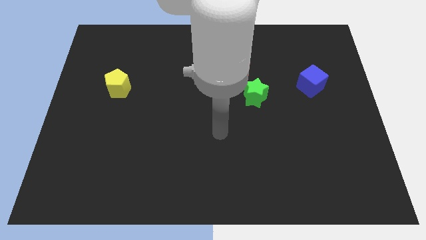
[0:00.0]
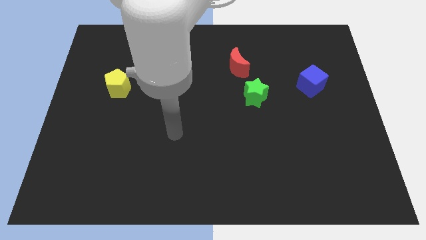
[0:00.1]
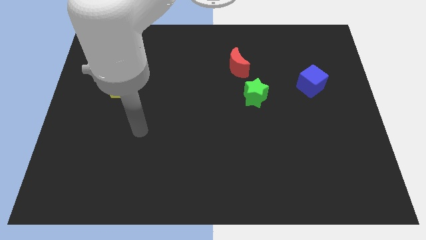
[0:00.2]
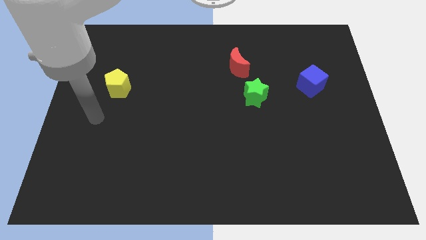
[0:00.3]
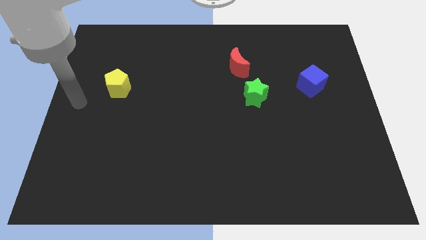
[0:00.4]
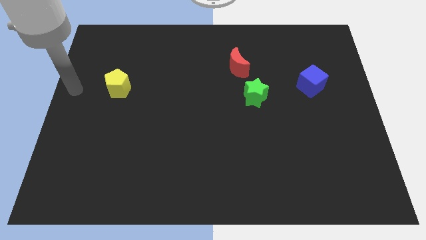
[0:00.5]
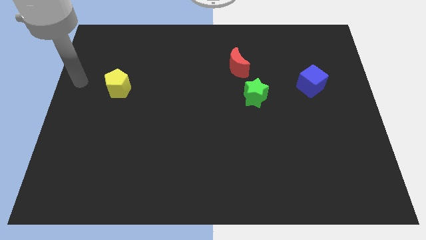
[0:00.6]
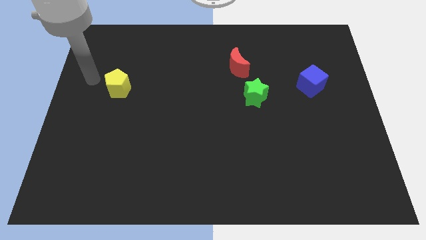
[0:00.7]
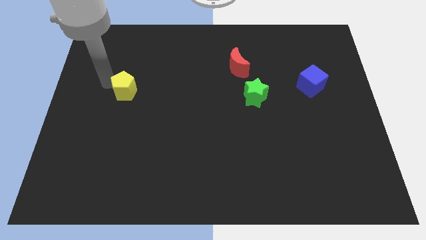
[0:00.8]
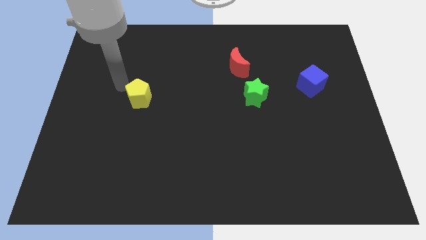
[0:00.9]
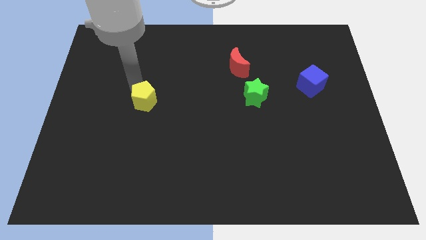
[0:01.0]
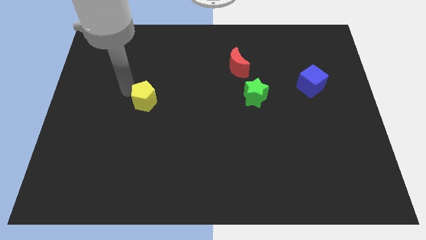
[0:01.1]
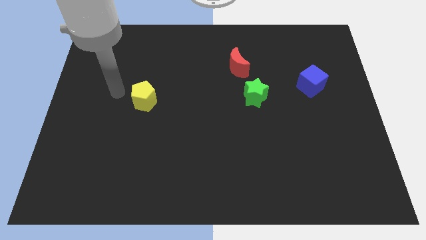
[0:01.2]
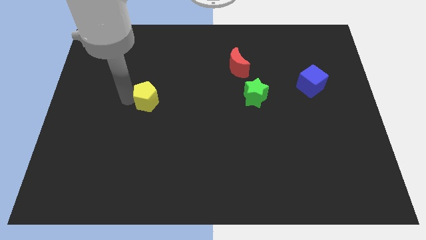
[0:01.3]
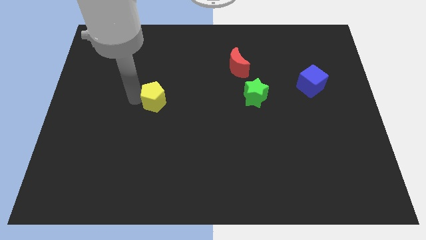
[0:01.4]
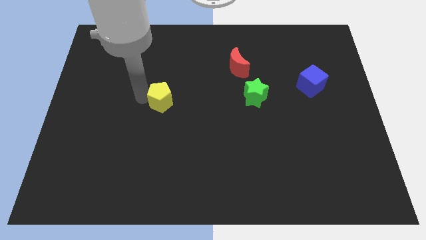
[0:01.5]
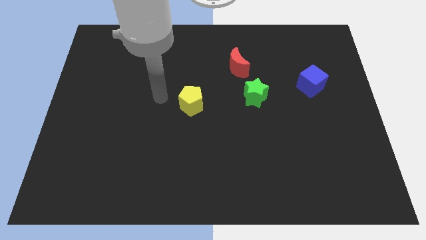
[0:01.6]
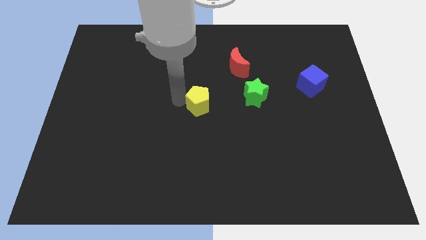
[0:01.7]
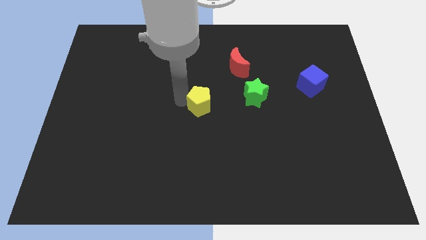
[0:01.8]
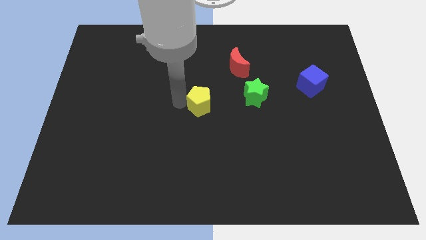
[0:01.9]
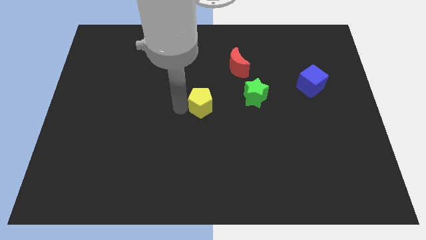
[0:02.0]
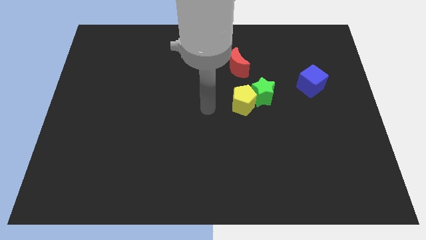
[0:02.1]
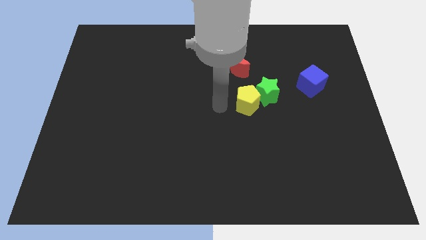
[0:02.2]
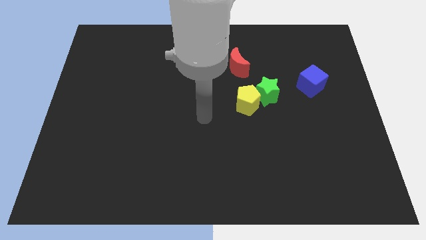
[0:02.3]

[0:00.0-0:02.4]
move the pentagon to the green block

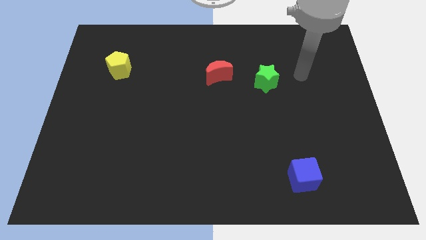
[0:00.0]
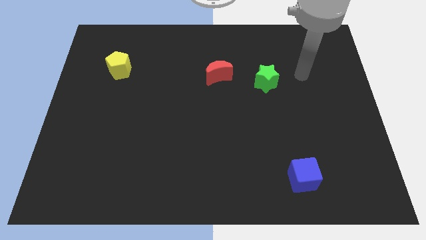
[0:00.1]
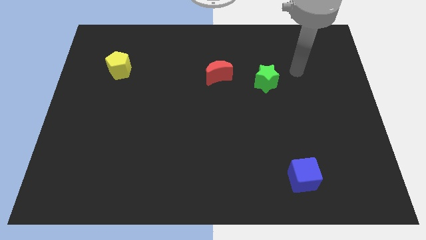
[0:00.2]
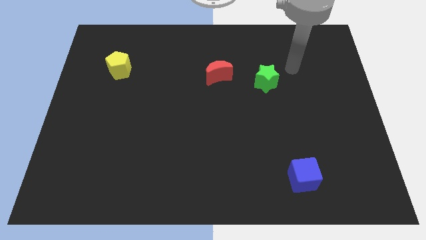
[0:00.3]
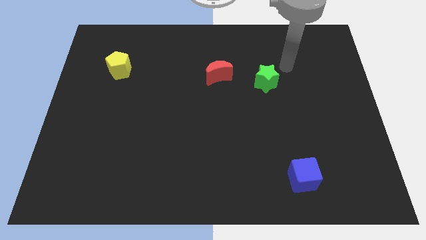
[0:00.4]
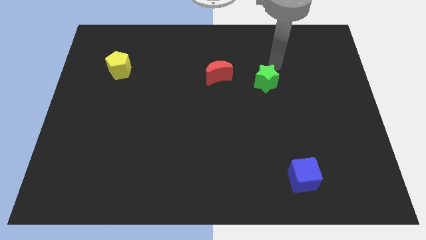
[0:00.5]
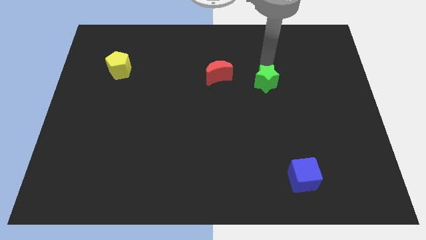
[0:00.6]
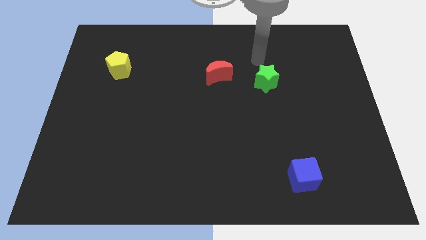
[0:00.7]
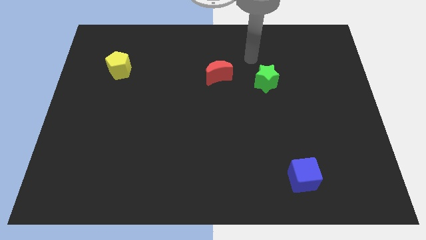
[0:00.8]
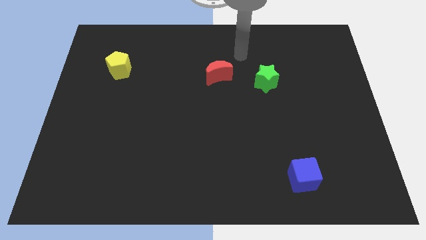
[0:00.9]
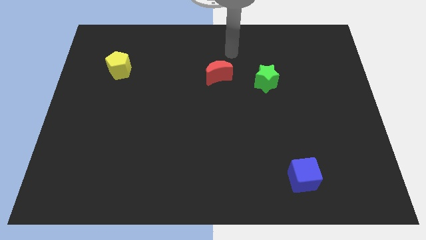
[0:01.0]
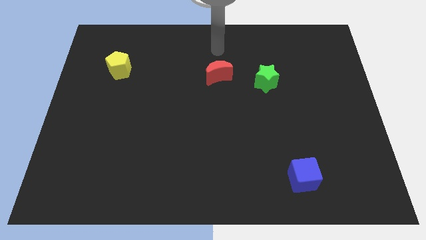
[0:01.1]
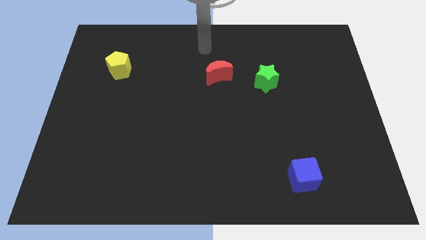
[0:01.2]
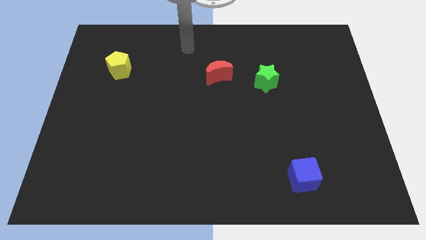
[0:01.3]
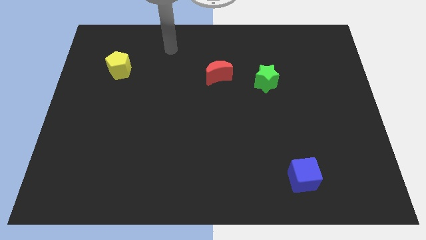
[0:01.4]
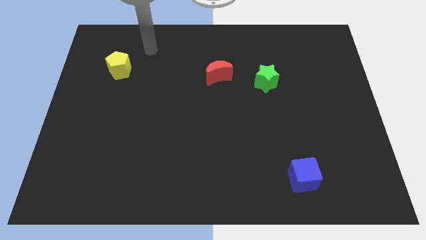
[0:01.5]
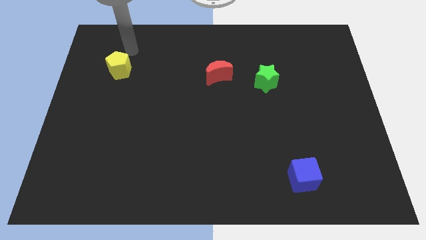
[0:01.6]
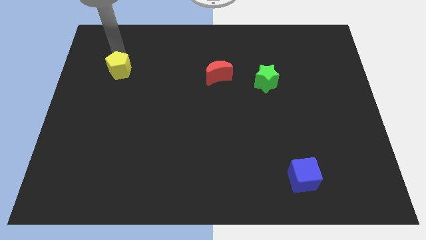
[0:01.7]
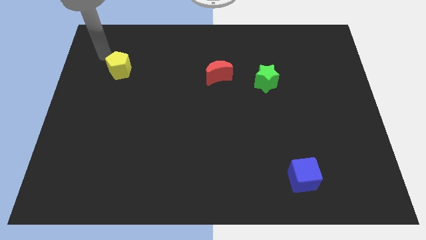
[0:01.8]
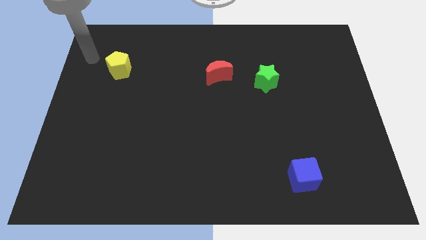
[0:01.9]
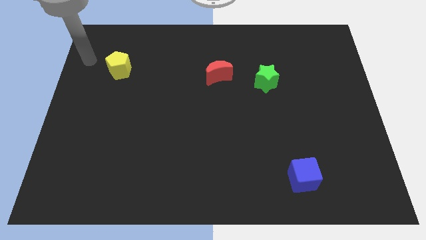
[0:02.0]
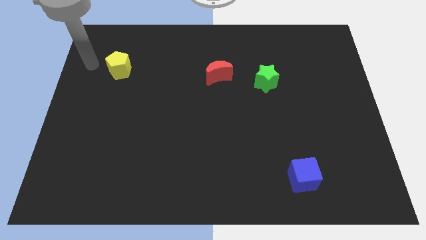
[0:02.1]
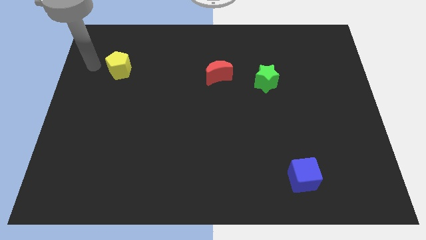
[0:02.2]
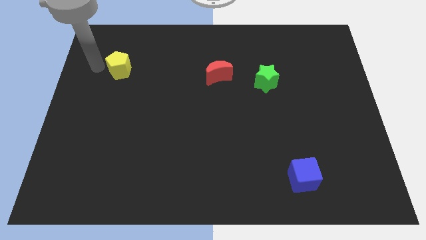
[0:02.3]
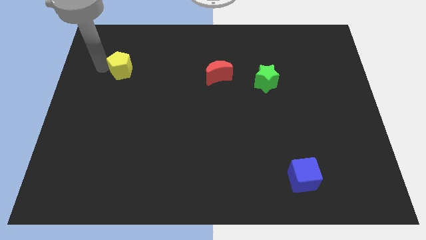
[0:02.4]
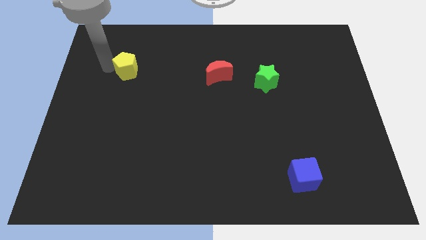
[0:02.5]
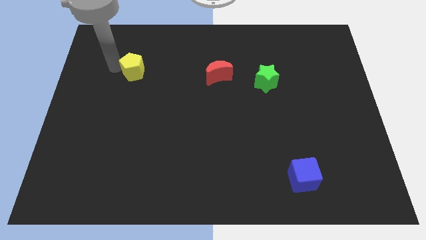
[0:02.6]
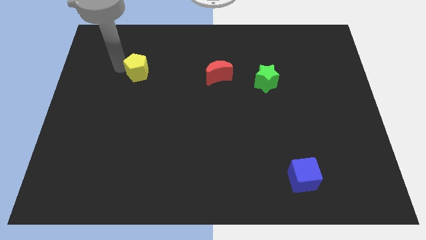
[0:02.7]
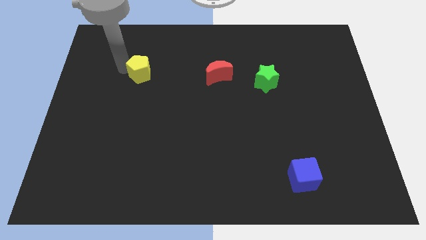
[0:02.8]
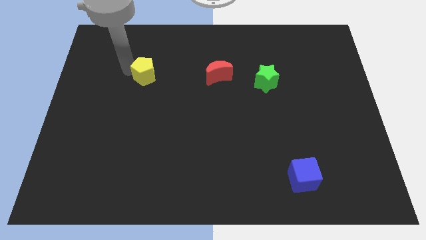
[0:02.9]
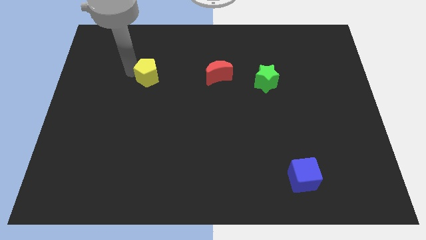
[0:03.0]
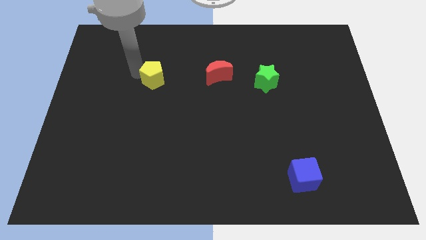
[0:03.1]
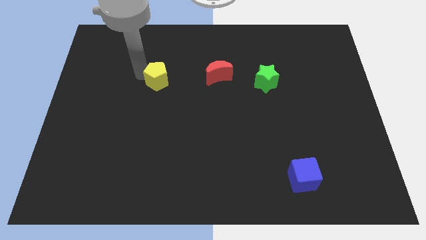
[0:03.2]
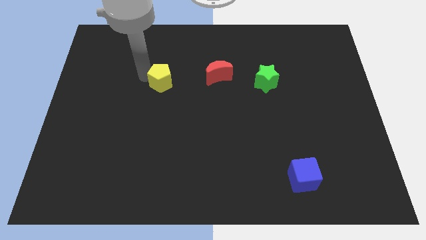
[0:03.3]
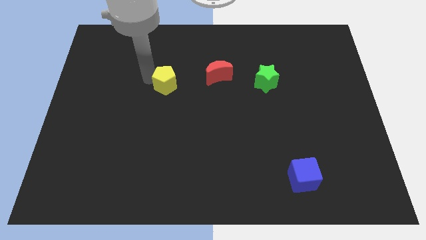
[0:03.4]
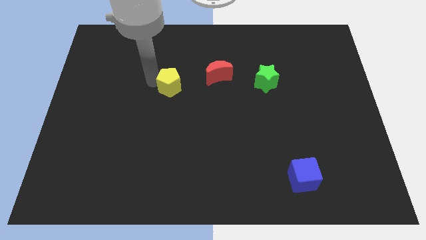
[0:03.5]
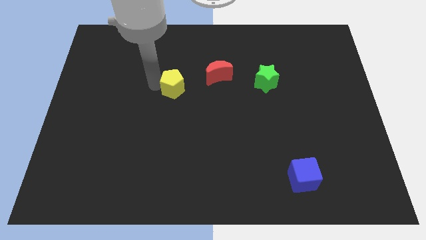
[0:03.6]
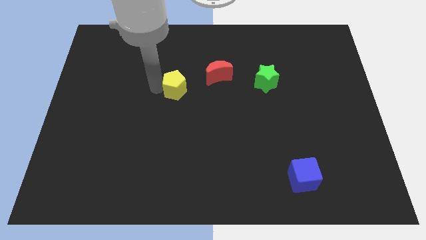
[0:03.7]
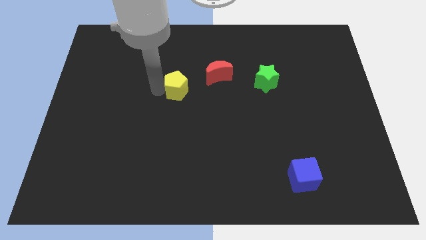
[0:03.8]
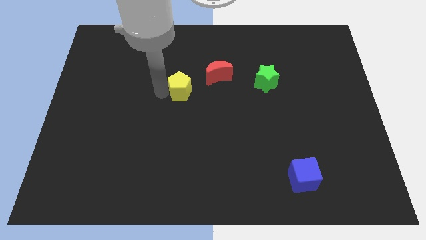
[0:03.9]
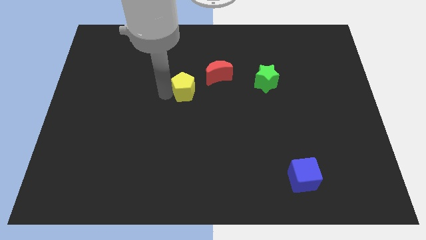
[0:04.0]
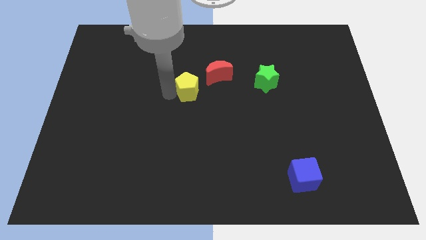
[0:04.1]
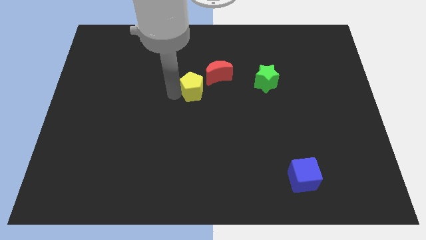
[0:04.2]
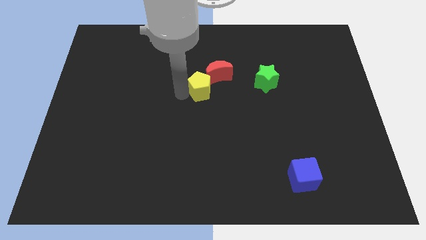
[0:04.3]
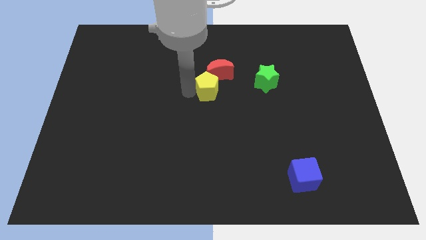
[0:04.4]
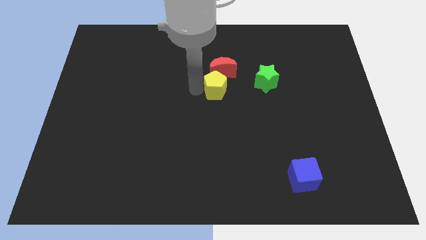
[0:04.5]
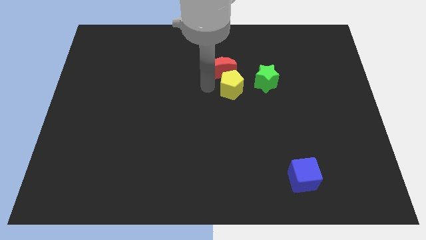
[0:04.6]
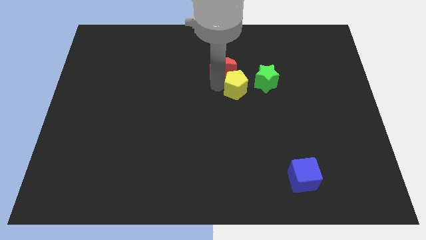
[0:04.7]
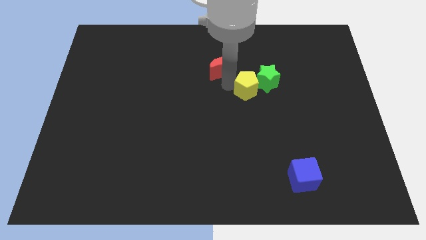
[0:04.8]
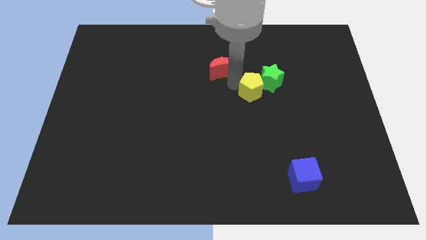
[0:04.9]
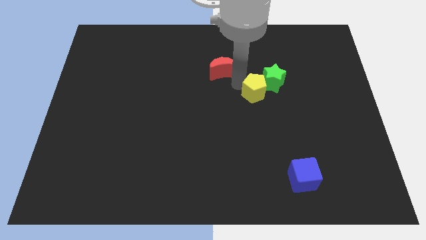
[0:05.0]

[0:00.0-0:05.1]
put the yellow pentagon next to the star

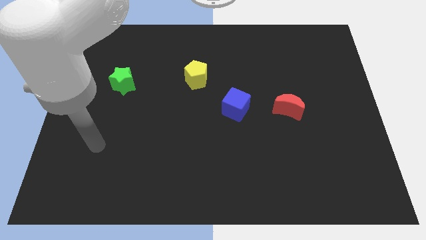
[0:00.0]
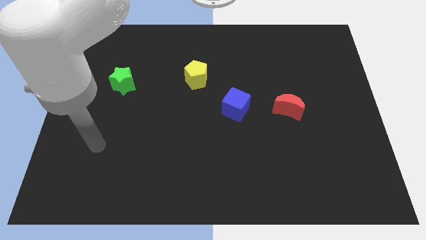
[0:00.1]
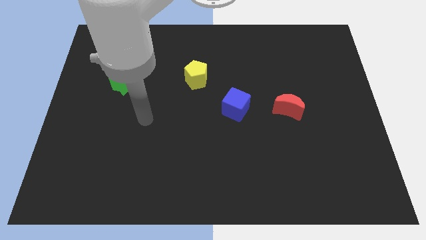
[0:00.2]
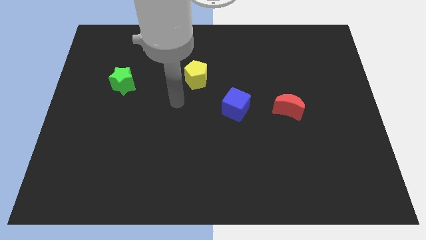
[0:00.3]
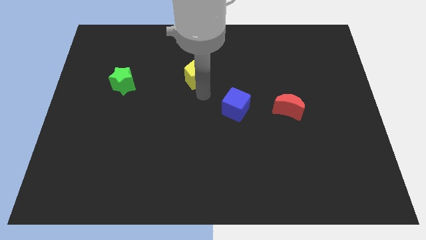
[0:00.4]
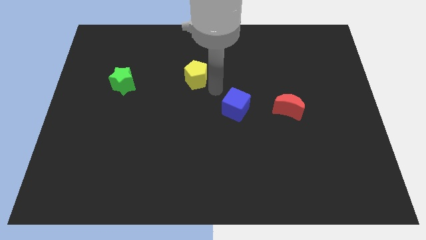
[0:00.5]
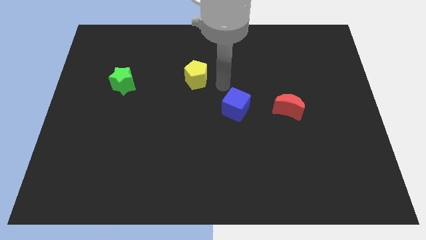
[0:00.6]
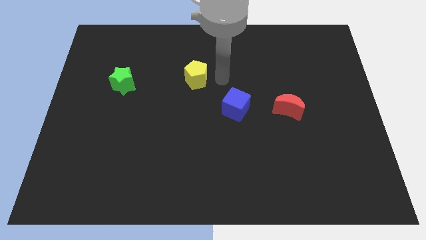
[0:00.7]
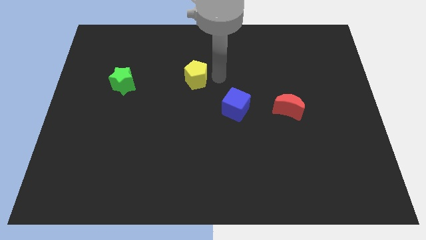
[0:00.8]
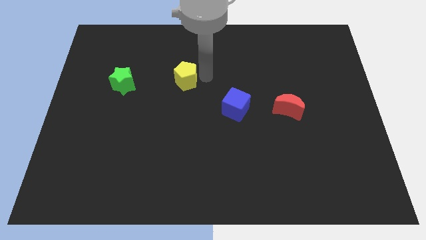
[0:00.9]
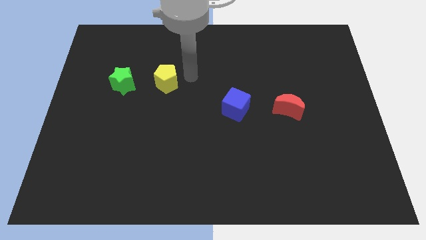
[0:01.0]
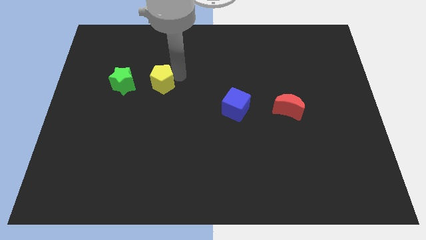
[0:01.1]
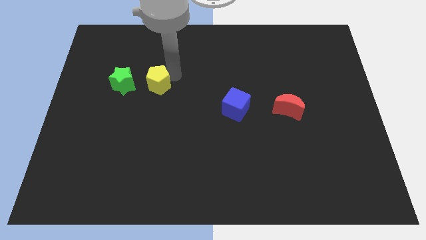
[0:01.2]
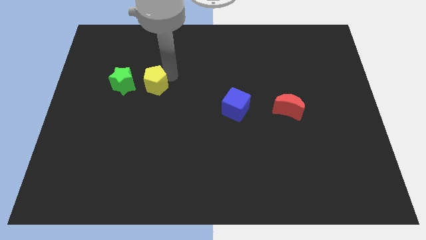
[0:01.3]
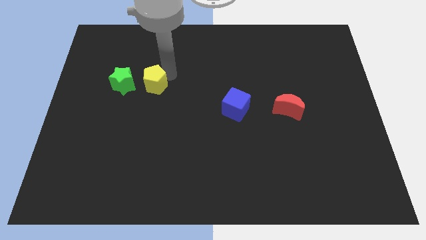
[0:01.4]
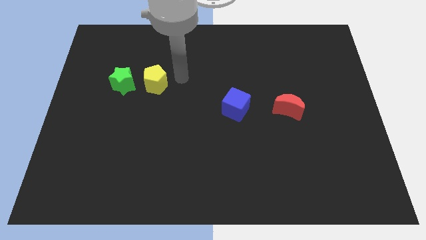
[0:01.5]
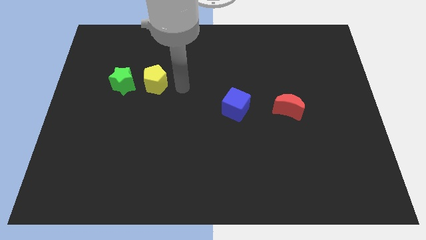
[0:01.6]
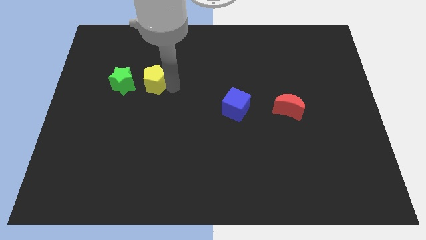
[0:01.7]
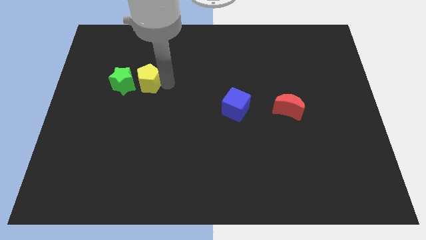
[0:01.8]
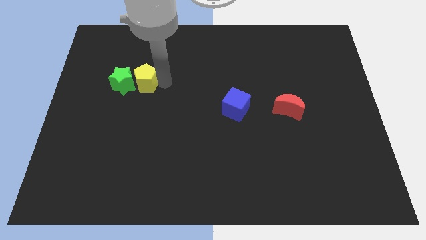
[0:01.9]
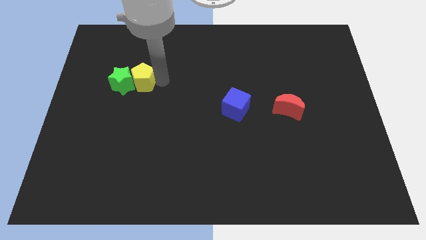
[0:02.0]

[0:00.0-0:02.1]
slide the yellow pentagon to the star
